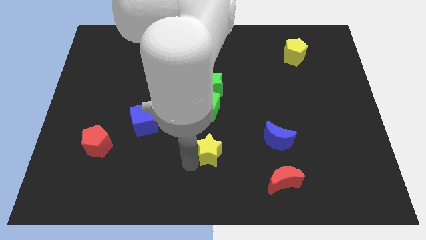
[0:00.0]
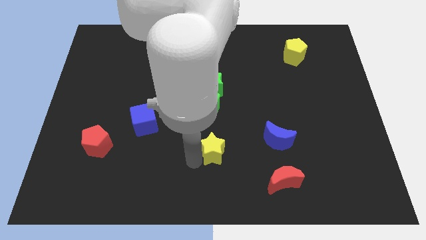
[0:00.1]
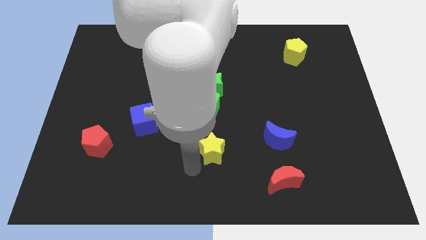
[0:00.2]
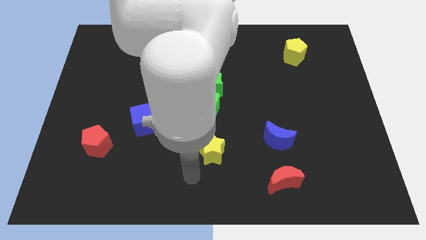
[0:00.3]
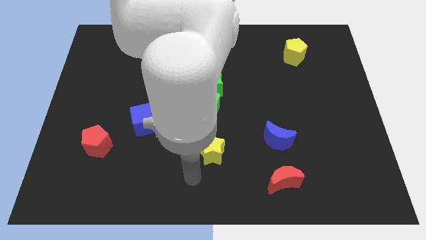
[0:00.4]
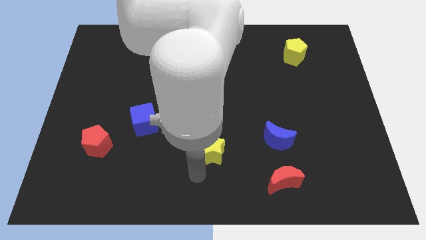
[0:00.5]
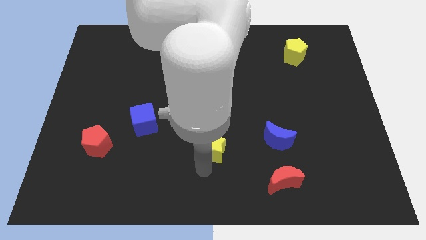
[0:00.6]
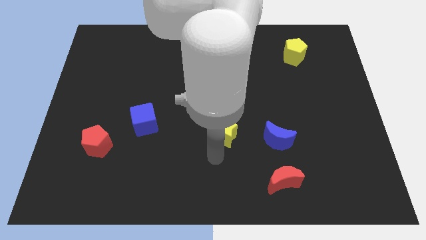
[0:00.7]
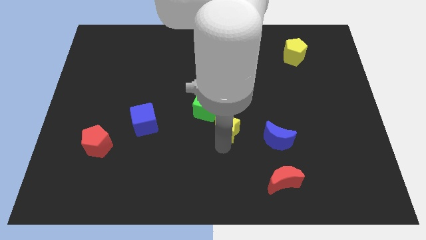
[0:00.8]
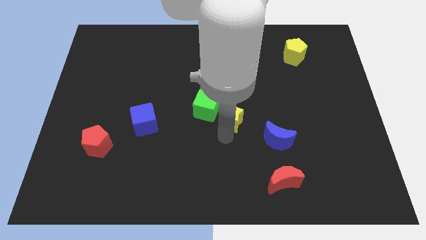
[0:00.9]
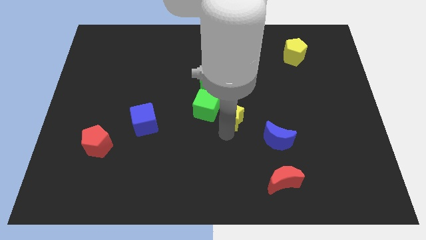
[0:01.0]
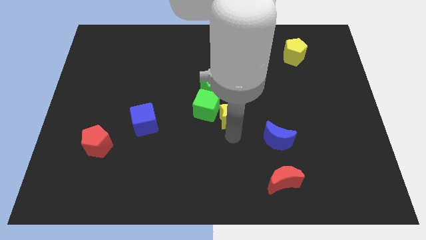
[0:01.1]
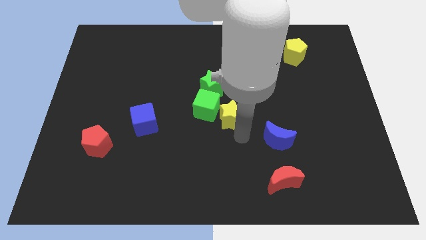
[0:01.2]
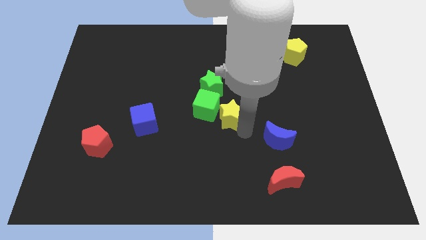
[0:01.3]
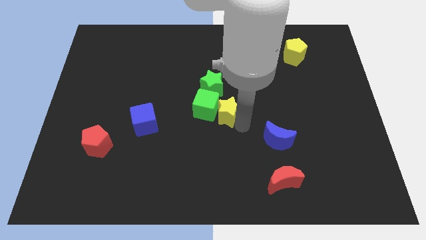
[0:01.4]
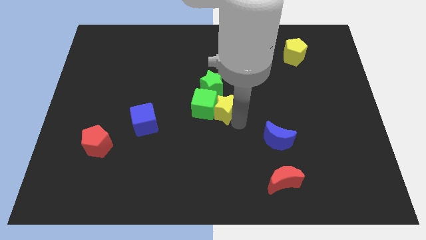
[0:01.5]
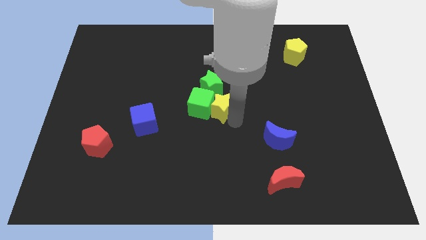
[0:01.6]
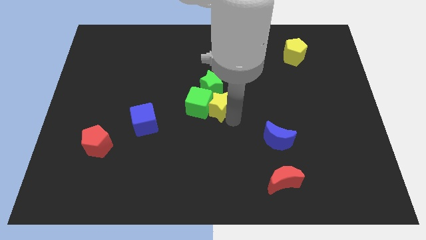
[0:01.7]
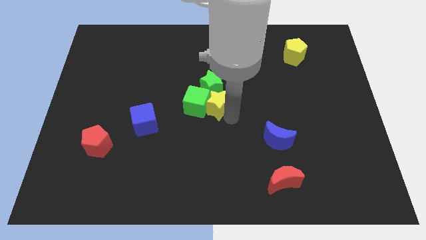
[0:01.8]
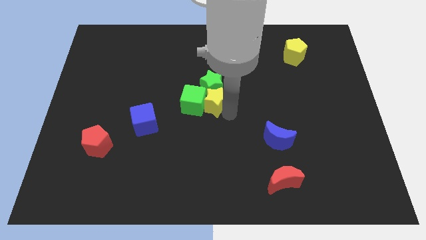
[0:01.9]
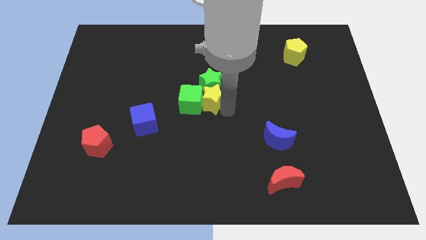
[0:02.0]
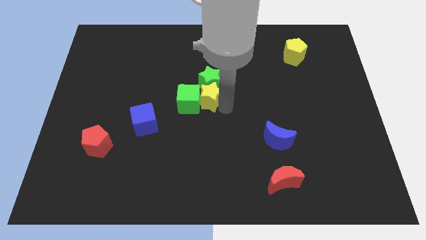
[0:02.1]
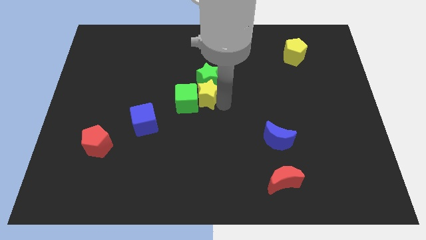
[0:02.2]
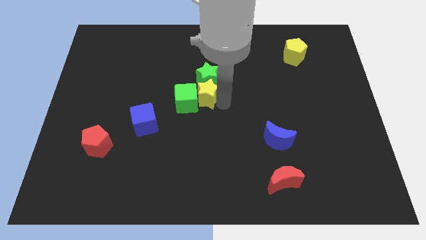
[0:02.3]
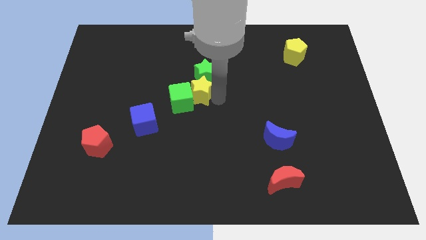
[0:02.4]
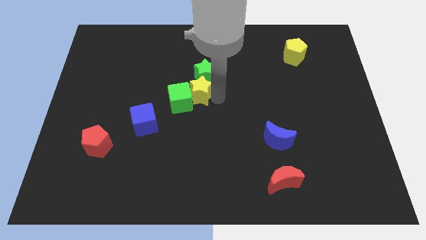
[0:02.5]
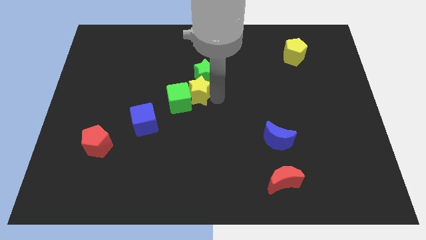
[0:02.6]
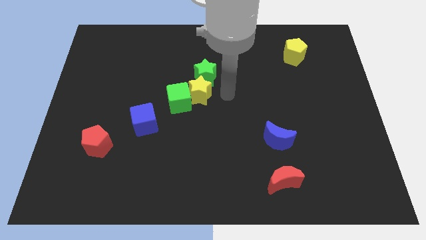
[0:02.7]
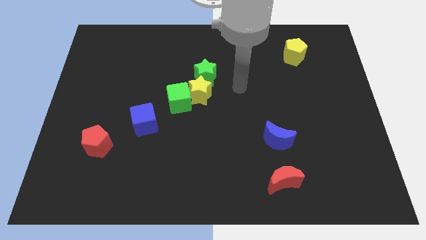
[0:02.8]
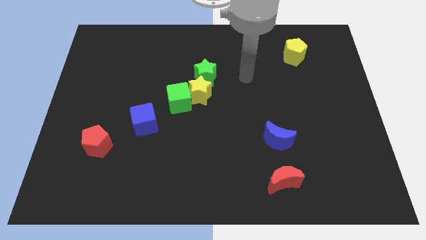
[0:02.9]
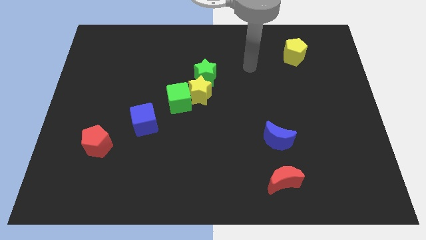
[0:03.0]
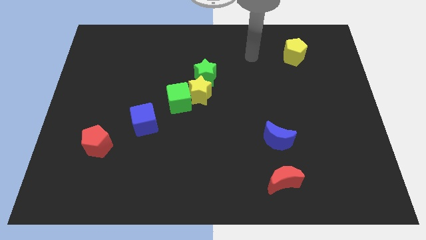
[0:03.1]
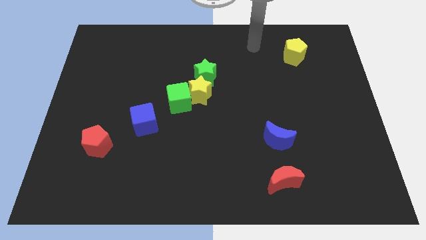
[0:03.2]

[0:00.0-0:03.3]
place the yellow star below the green star

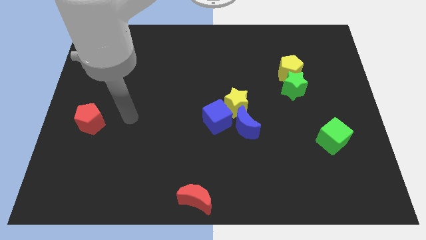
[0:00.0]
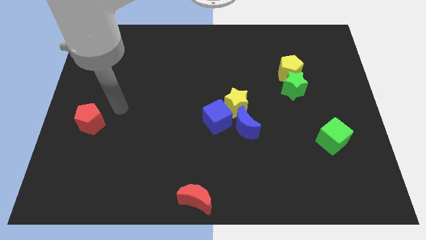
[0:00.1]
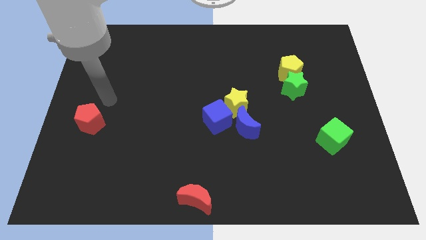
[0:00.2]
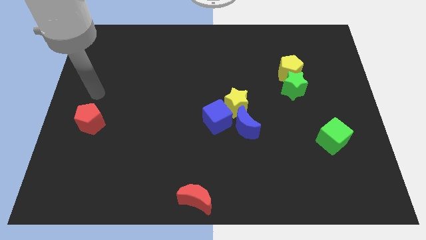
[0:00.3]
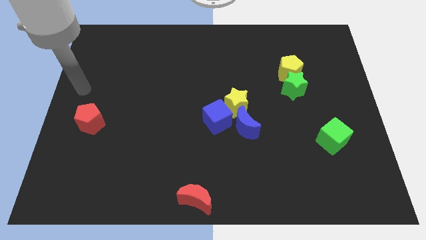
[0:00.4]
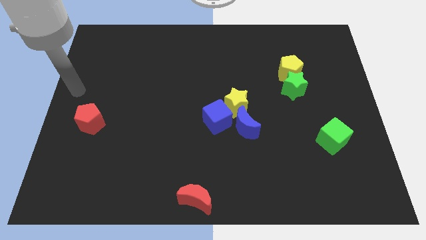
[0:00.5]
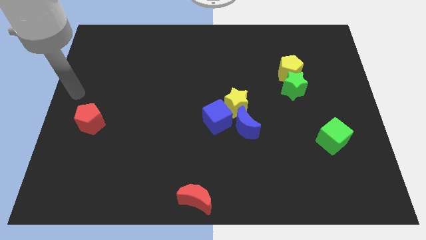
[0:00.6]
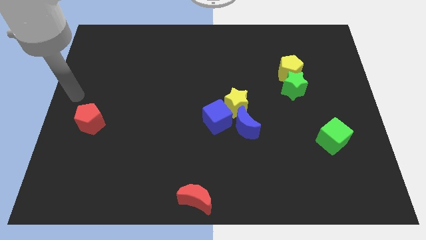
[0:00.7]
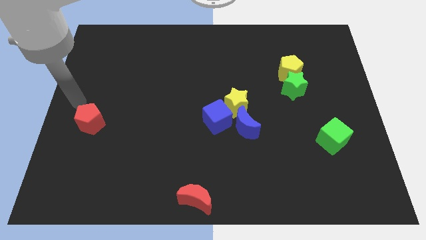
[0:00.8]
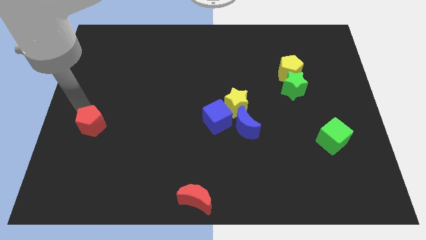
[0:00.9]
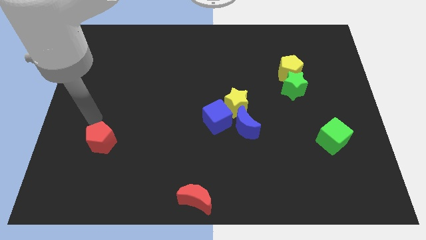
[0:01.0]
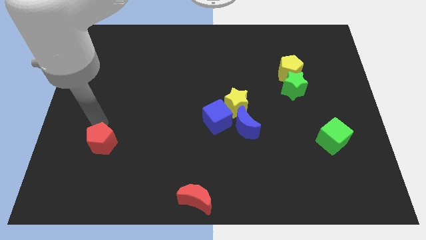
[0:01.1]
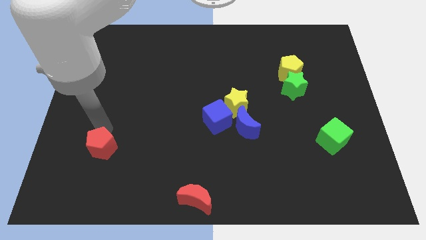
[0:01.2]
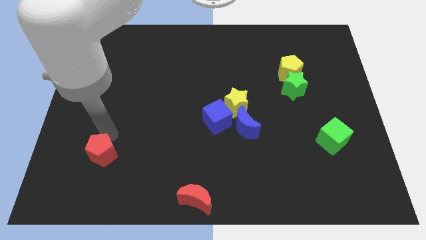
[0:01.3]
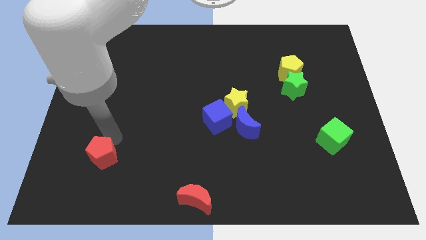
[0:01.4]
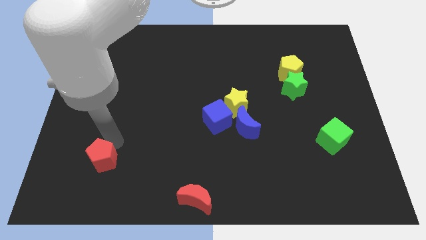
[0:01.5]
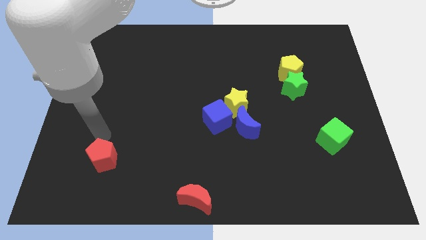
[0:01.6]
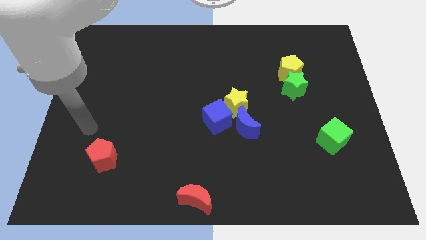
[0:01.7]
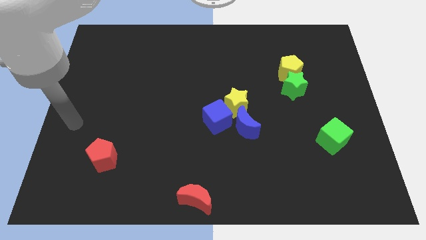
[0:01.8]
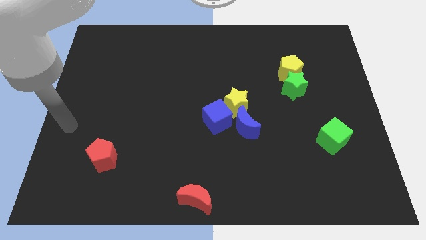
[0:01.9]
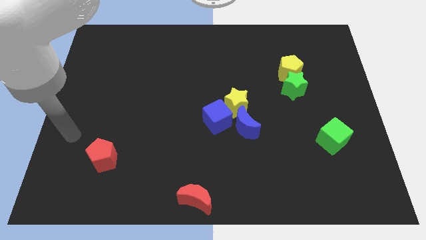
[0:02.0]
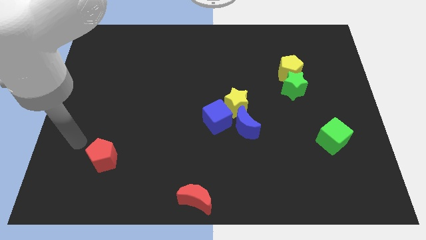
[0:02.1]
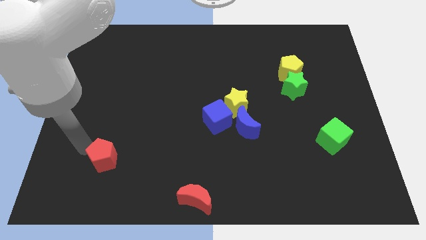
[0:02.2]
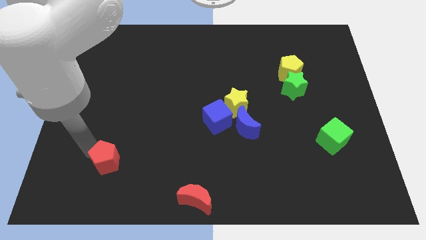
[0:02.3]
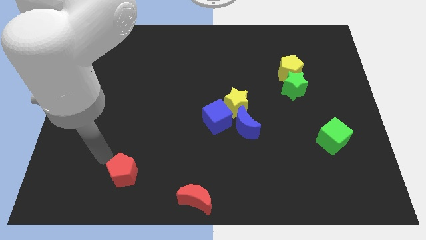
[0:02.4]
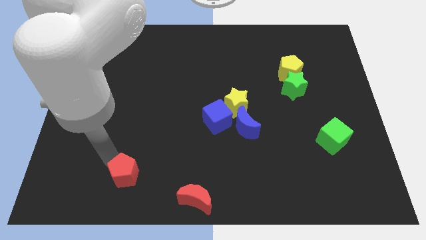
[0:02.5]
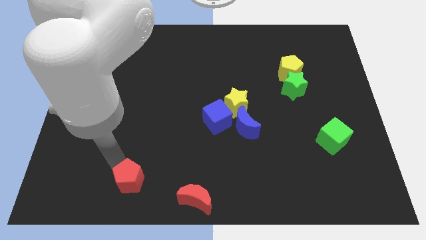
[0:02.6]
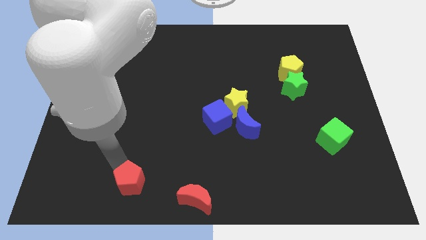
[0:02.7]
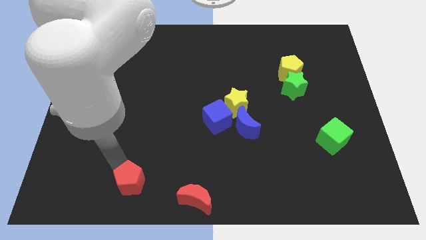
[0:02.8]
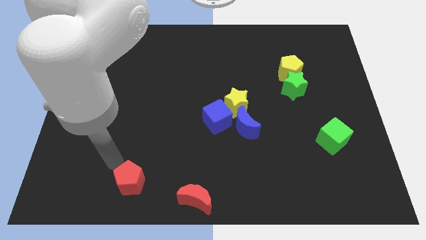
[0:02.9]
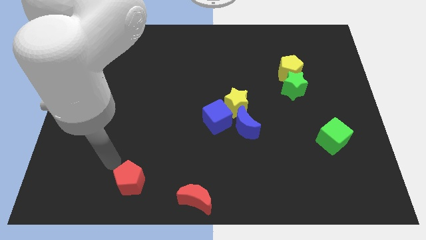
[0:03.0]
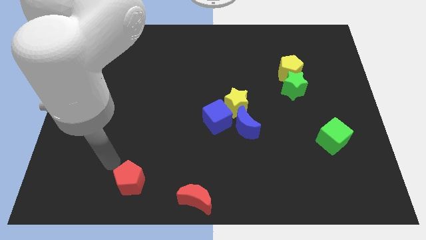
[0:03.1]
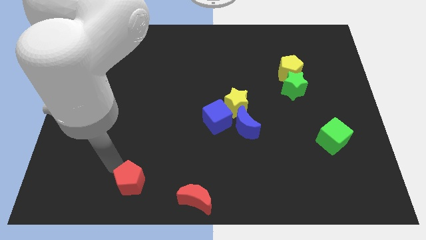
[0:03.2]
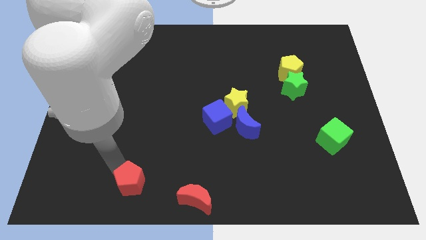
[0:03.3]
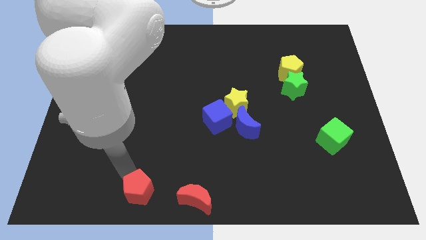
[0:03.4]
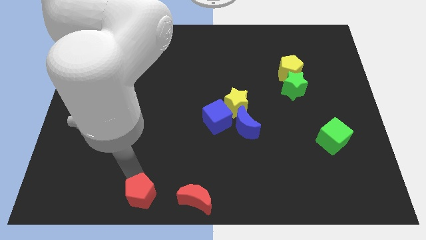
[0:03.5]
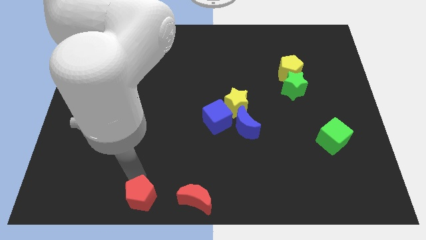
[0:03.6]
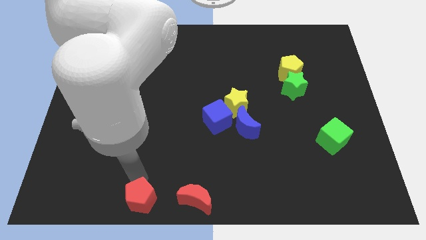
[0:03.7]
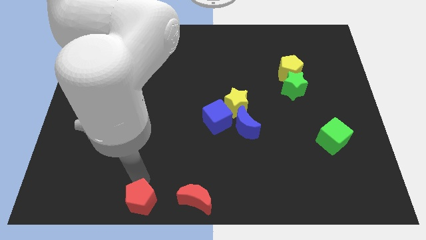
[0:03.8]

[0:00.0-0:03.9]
move the red pentagon to the left of red moon

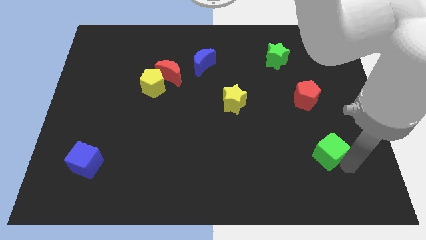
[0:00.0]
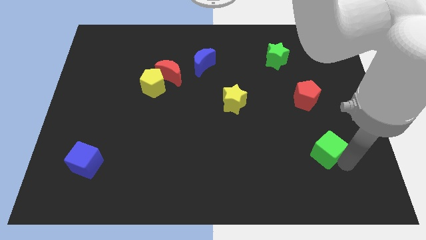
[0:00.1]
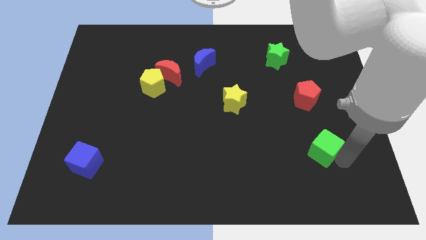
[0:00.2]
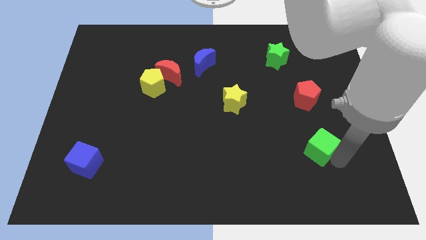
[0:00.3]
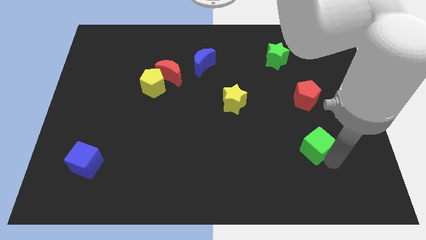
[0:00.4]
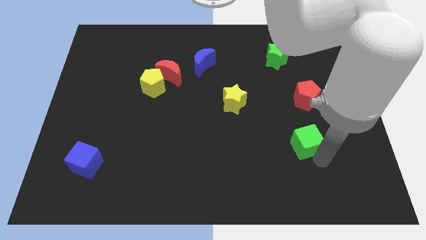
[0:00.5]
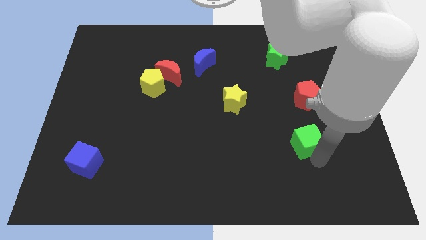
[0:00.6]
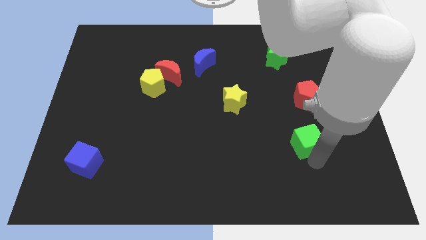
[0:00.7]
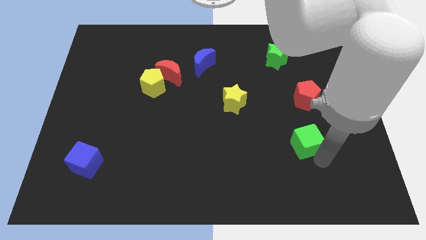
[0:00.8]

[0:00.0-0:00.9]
move the green cube to the center of the board

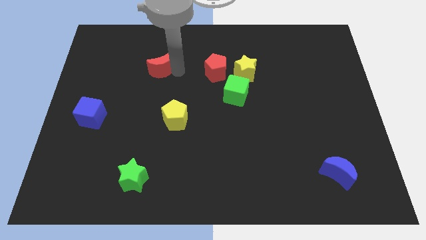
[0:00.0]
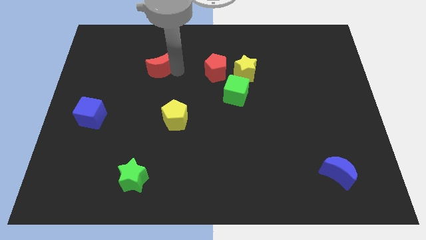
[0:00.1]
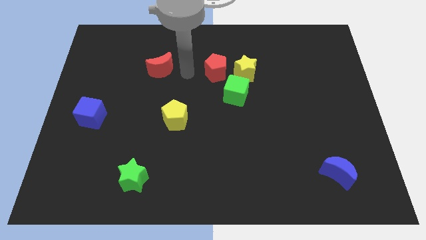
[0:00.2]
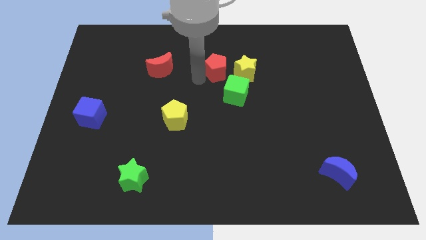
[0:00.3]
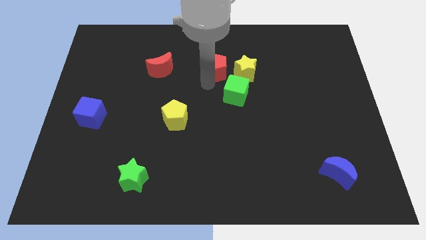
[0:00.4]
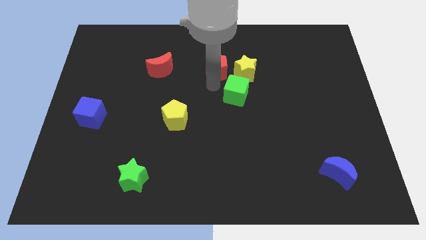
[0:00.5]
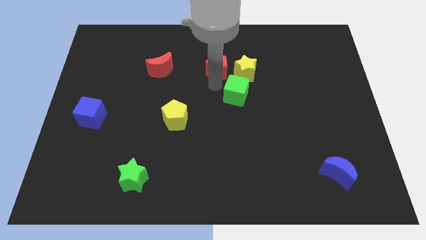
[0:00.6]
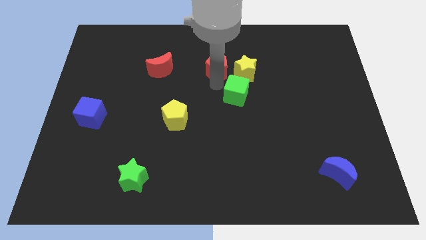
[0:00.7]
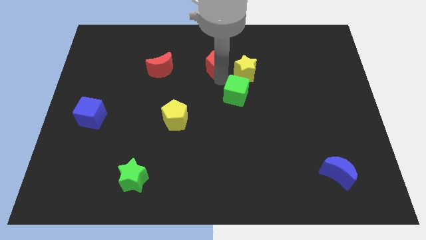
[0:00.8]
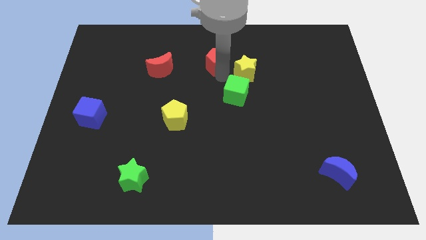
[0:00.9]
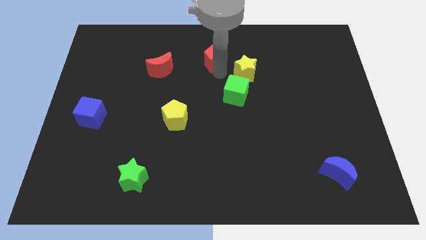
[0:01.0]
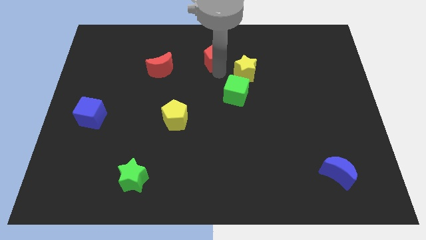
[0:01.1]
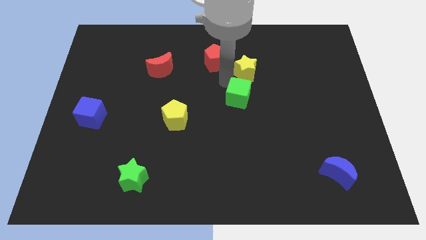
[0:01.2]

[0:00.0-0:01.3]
slightly move the red blocks upwards
